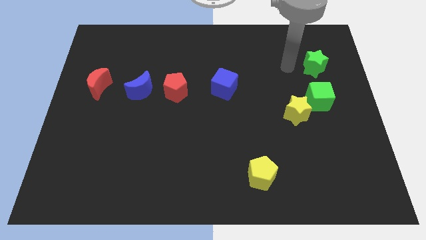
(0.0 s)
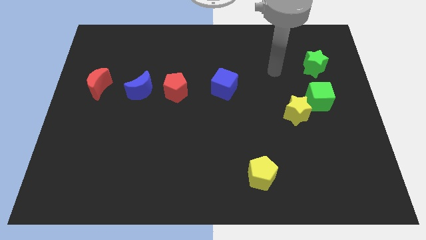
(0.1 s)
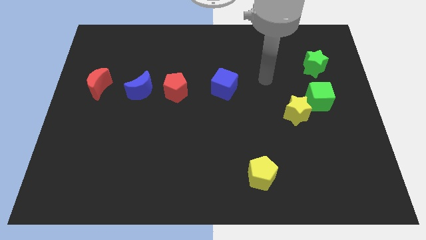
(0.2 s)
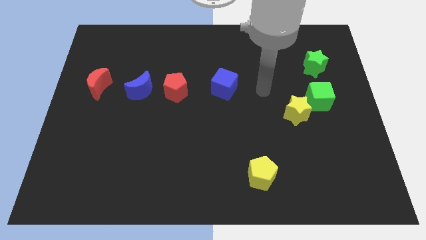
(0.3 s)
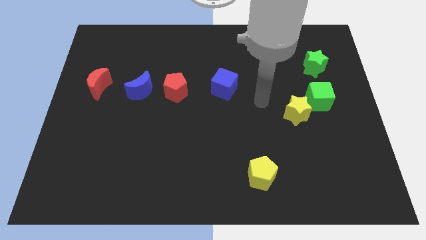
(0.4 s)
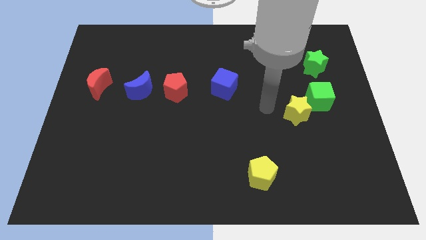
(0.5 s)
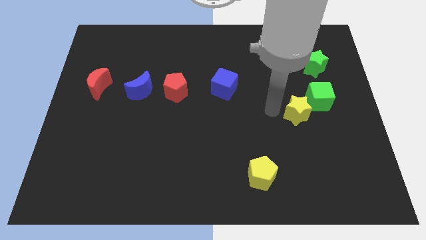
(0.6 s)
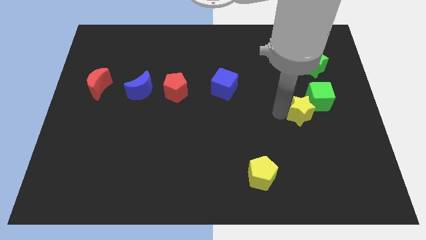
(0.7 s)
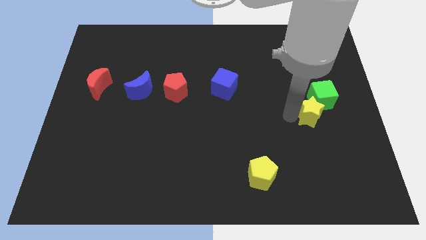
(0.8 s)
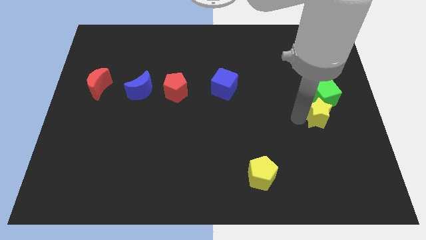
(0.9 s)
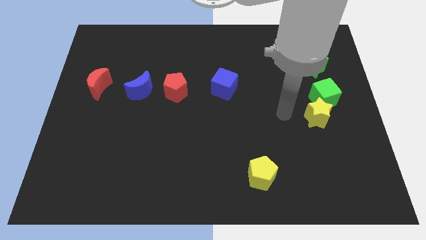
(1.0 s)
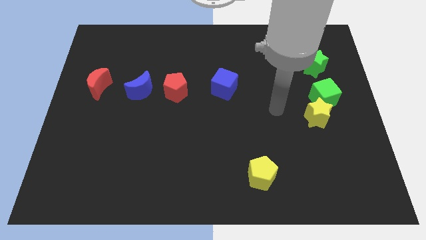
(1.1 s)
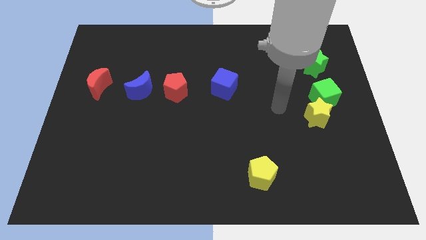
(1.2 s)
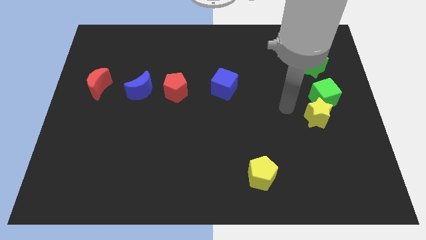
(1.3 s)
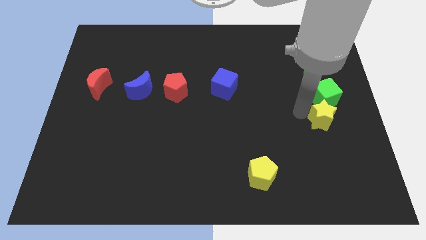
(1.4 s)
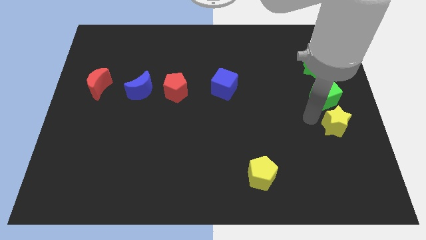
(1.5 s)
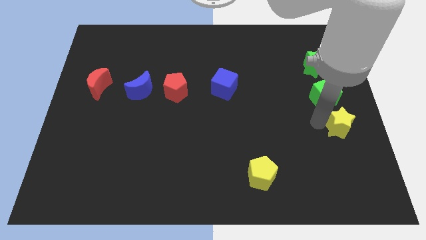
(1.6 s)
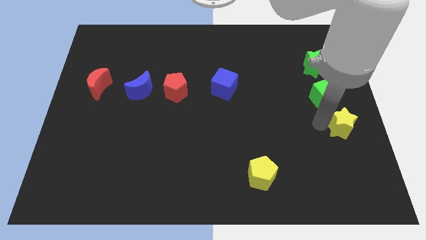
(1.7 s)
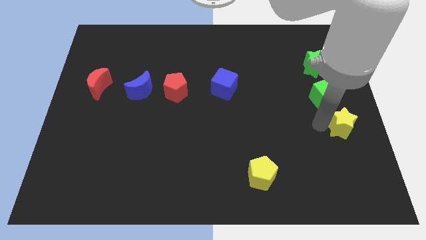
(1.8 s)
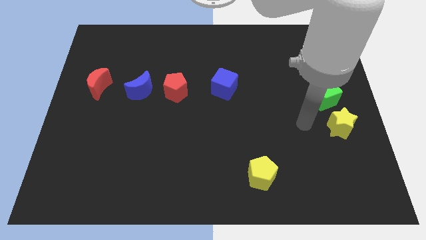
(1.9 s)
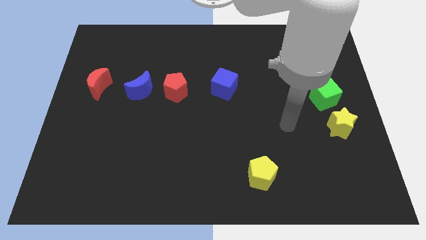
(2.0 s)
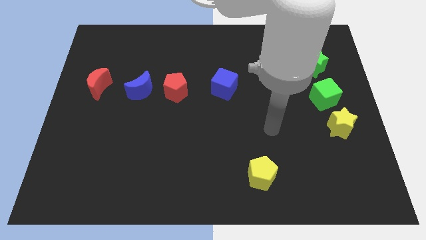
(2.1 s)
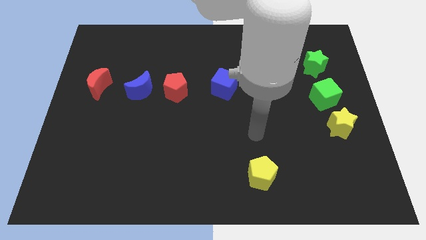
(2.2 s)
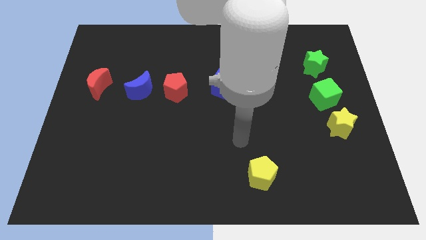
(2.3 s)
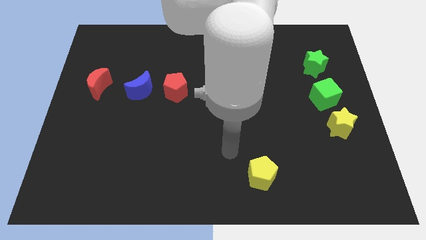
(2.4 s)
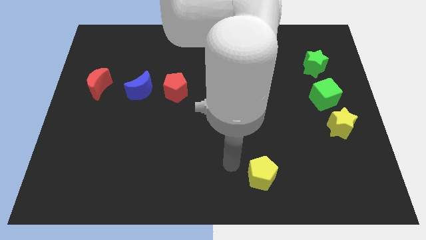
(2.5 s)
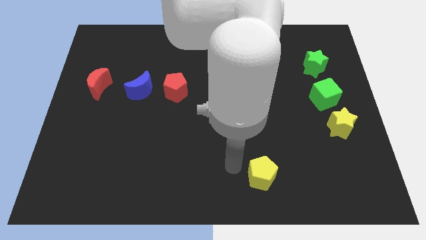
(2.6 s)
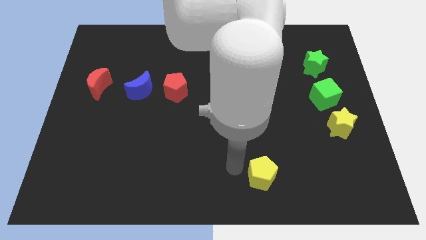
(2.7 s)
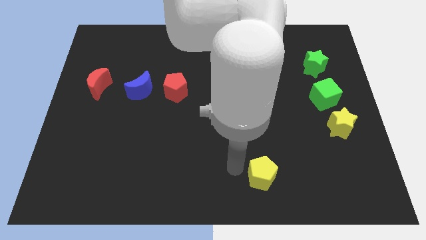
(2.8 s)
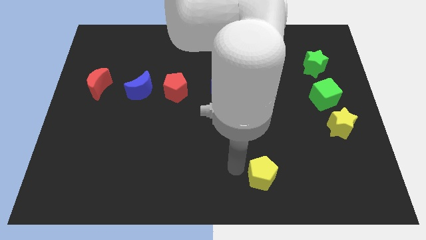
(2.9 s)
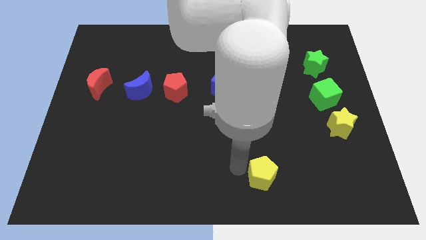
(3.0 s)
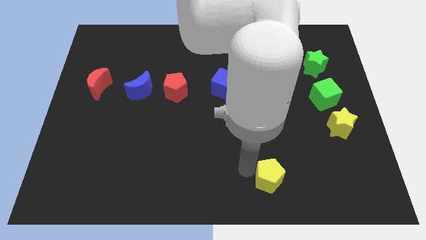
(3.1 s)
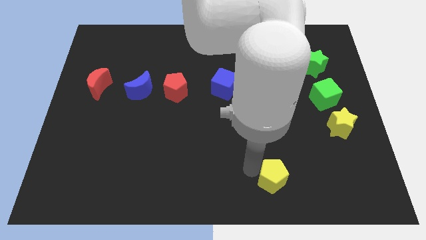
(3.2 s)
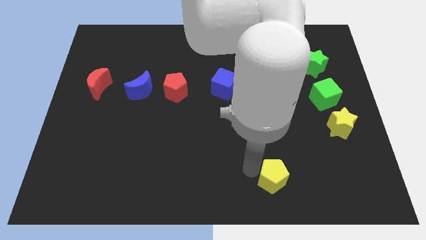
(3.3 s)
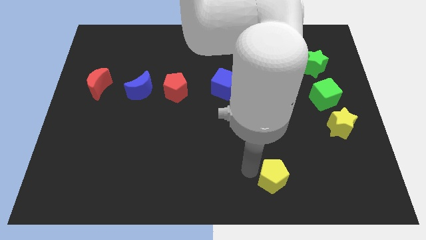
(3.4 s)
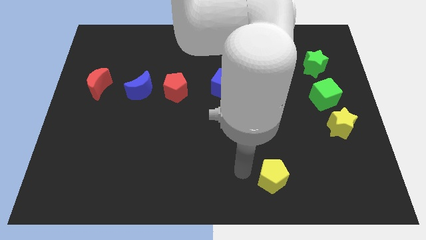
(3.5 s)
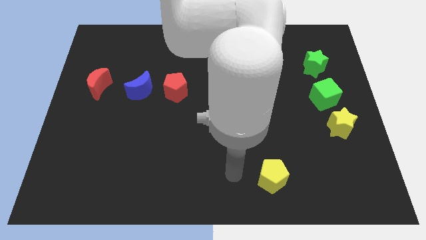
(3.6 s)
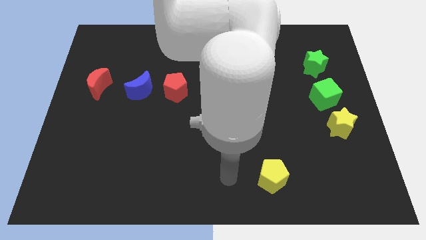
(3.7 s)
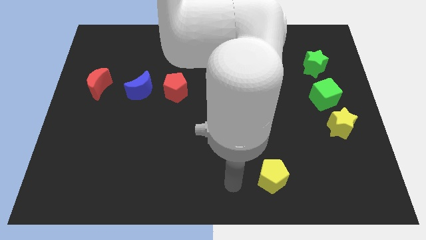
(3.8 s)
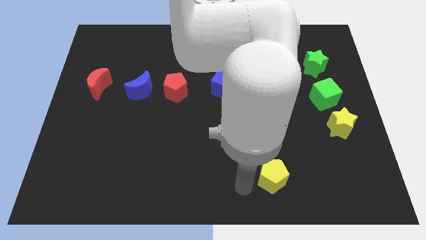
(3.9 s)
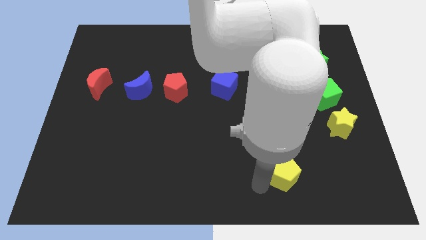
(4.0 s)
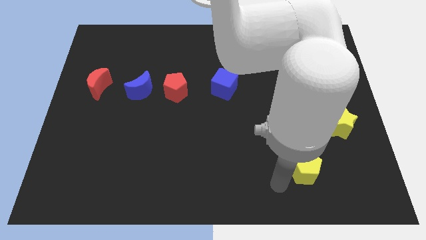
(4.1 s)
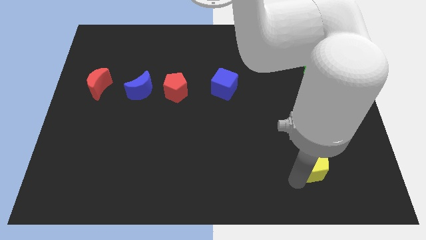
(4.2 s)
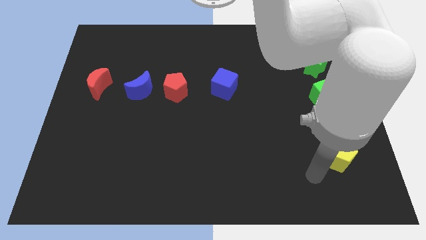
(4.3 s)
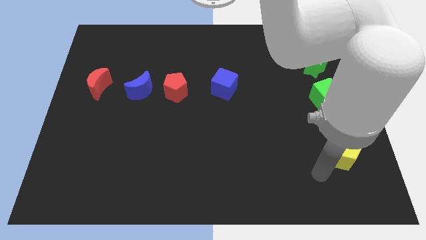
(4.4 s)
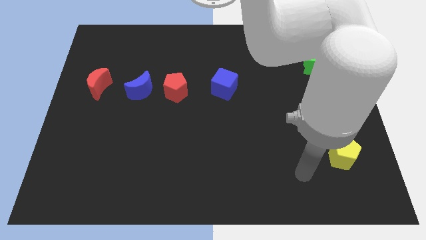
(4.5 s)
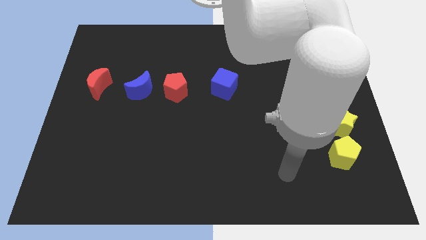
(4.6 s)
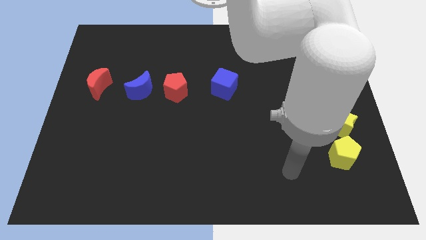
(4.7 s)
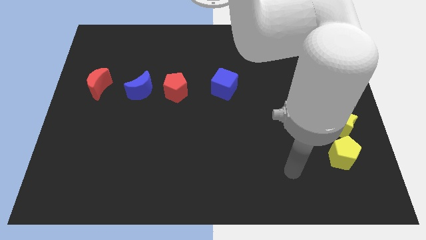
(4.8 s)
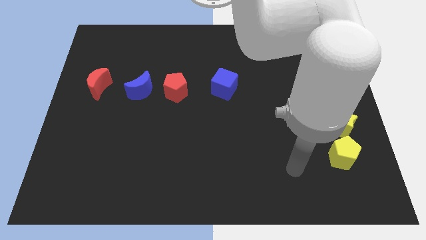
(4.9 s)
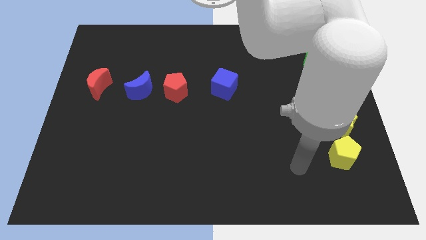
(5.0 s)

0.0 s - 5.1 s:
adjust the yellow and green blocks to form a vertical line

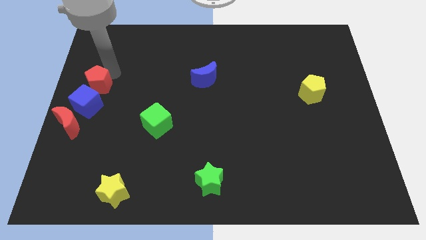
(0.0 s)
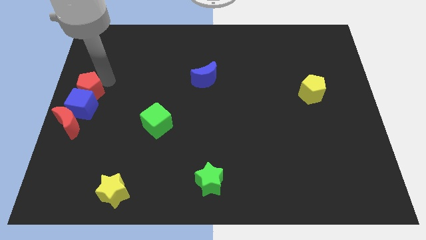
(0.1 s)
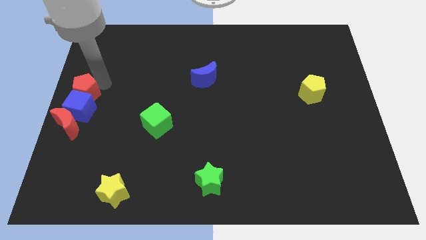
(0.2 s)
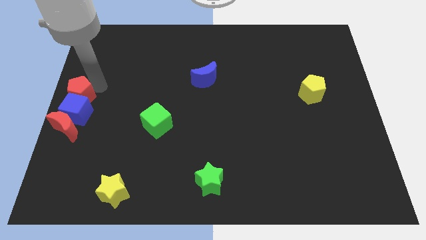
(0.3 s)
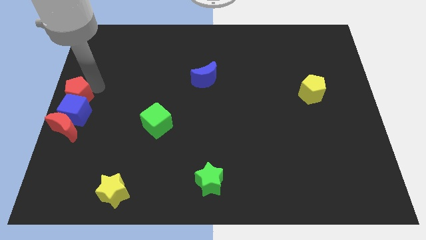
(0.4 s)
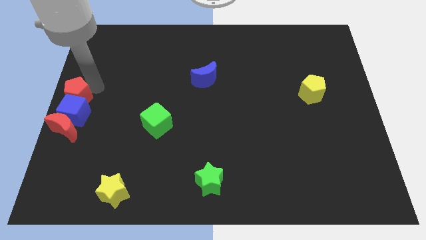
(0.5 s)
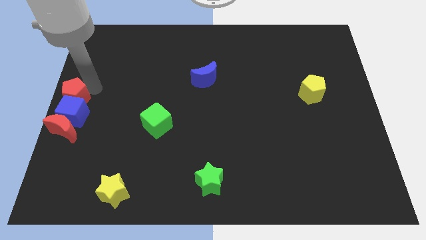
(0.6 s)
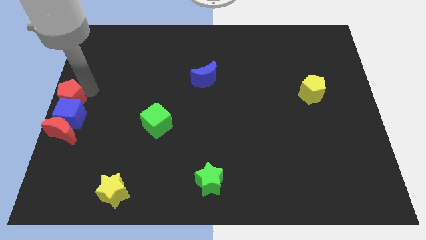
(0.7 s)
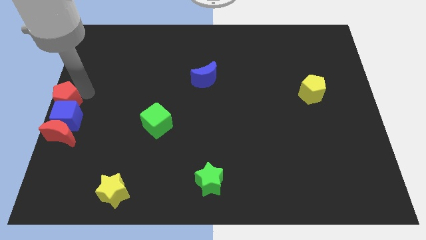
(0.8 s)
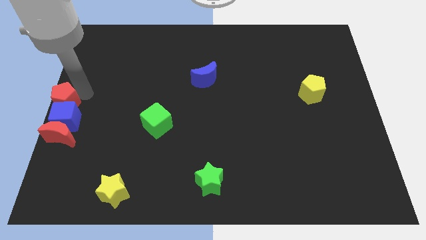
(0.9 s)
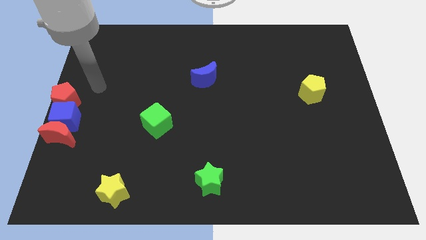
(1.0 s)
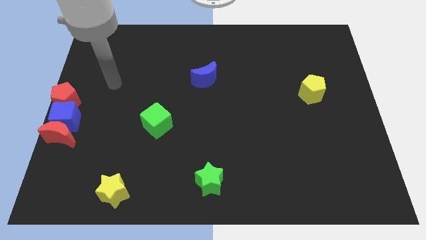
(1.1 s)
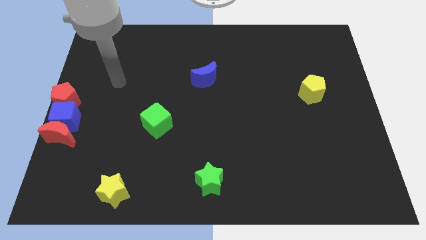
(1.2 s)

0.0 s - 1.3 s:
move red pentagon and moon and blue cube to the left middle of the board

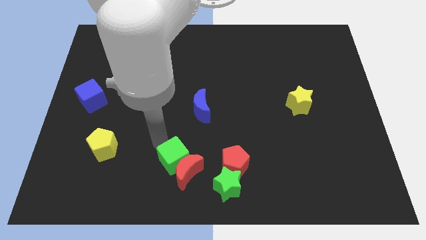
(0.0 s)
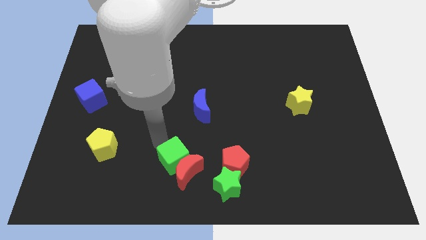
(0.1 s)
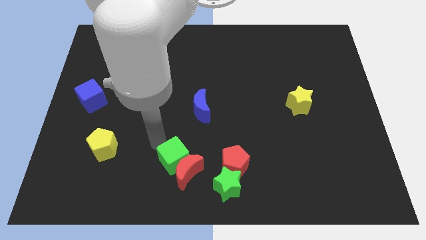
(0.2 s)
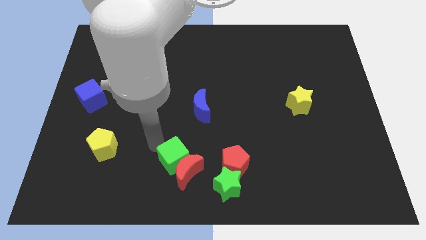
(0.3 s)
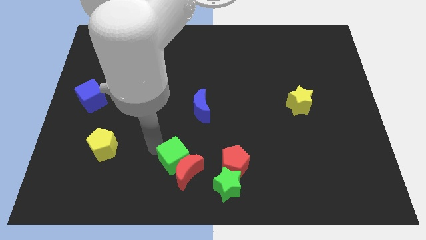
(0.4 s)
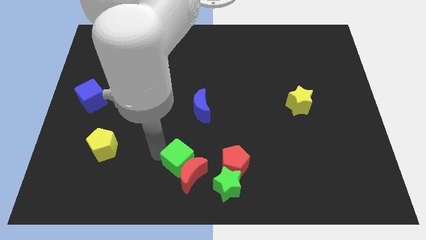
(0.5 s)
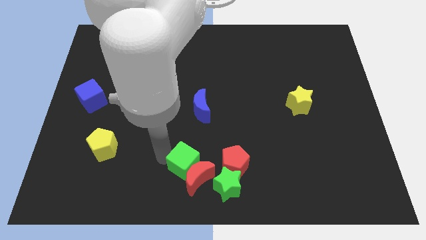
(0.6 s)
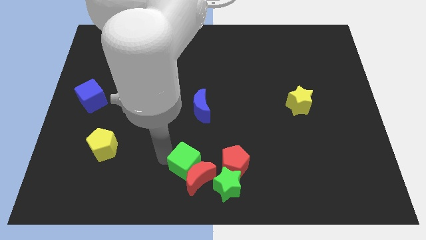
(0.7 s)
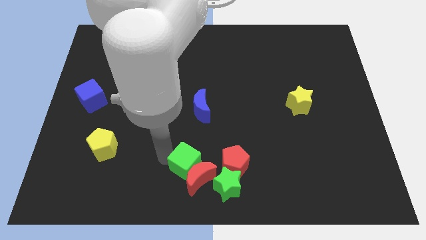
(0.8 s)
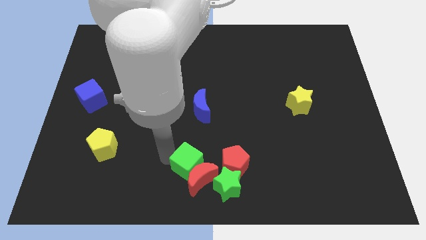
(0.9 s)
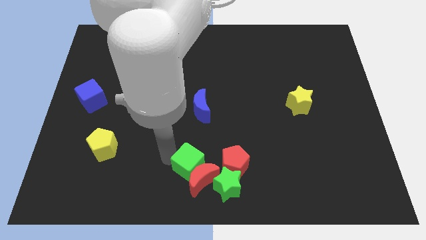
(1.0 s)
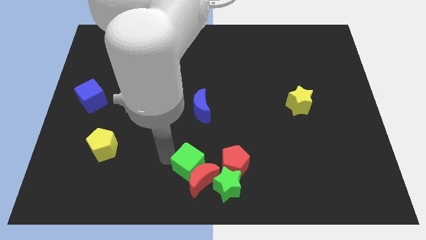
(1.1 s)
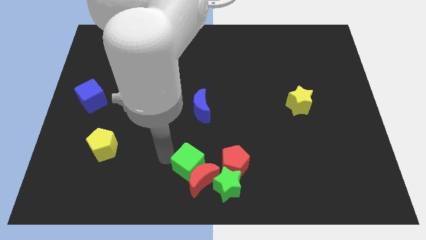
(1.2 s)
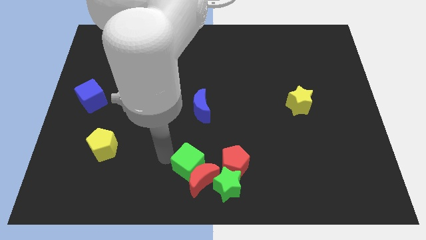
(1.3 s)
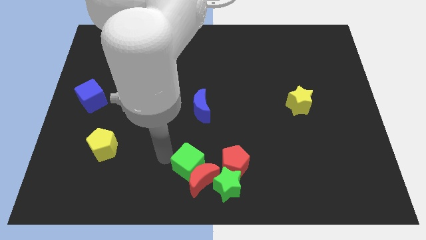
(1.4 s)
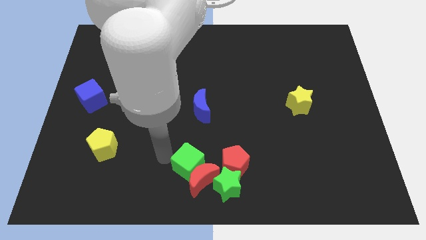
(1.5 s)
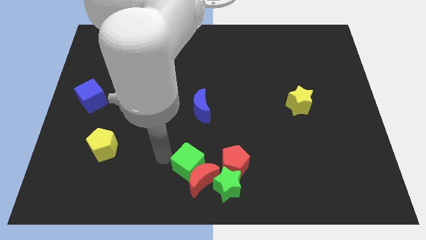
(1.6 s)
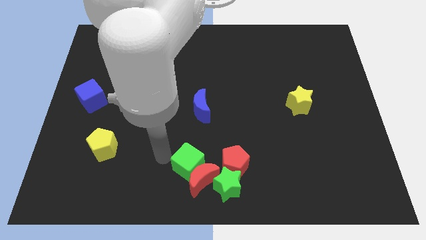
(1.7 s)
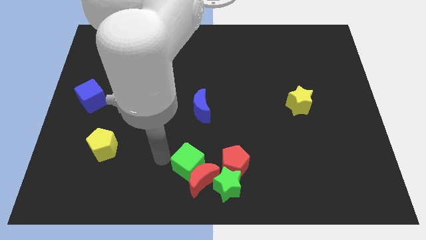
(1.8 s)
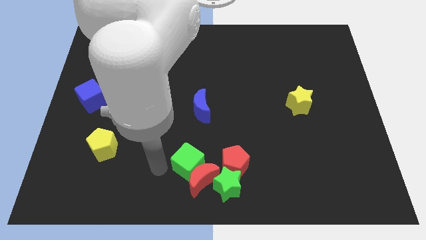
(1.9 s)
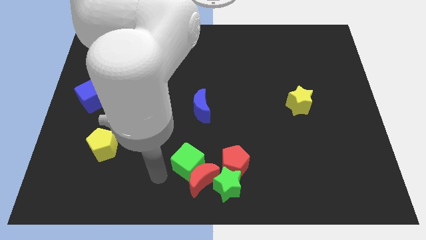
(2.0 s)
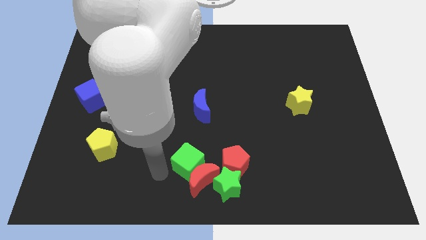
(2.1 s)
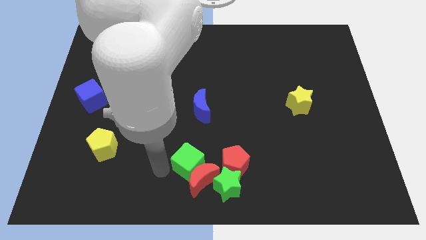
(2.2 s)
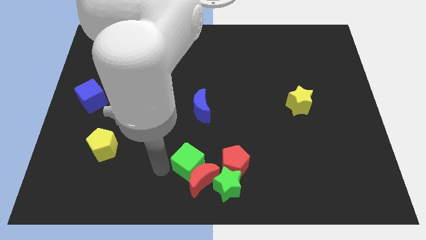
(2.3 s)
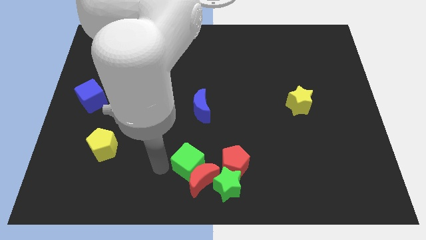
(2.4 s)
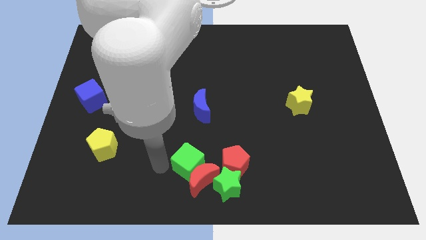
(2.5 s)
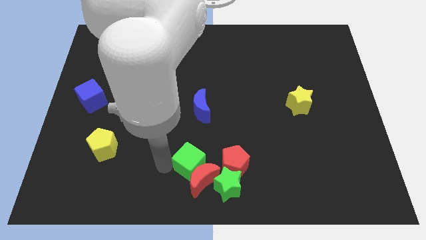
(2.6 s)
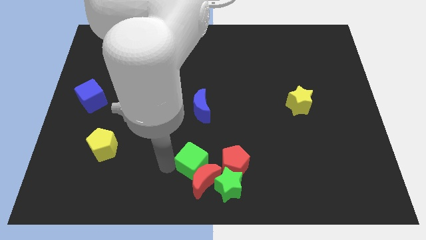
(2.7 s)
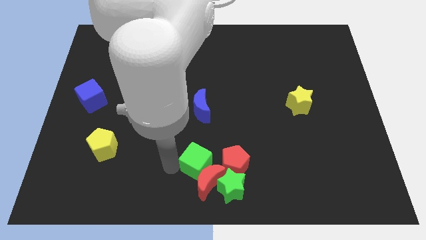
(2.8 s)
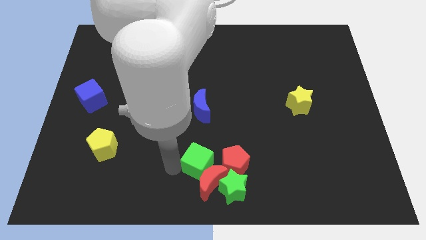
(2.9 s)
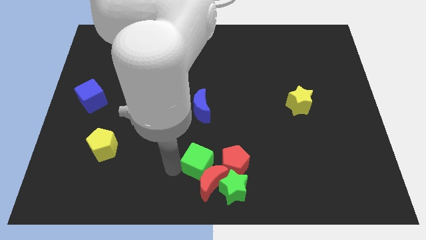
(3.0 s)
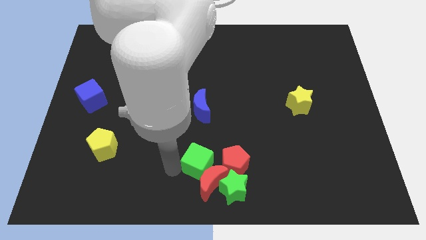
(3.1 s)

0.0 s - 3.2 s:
push the red moon with a green cube into the green star
